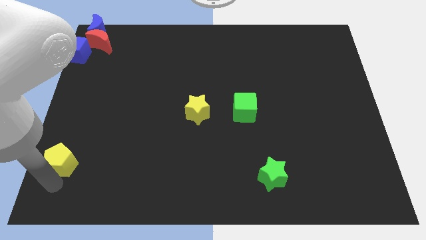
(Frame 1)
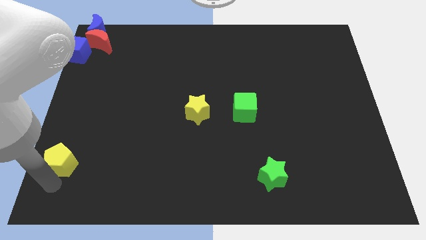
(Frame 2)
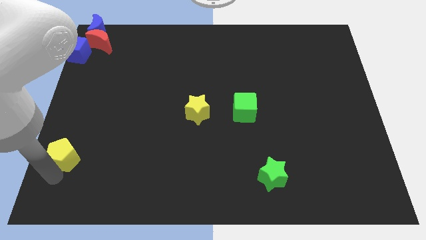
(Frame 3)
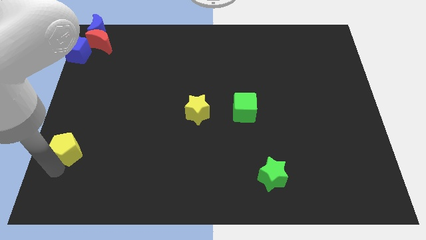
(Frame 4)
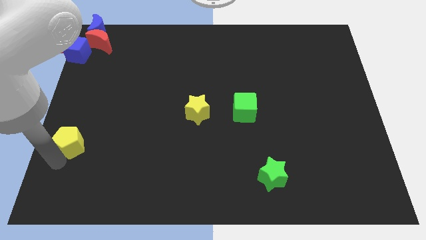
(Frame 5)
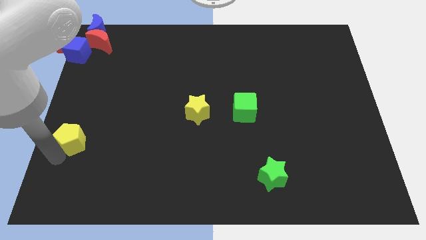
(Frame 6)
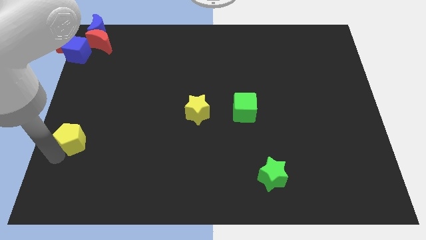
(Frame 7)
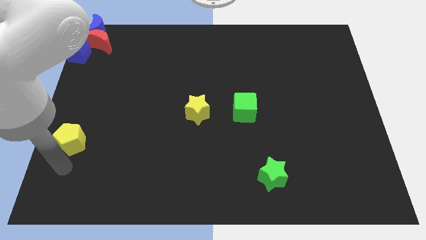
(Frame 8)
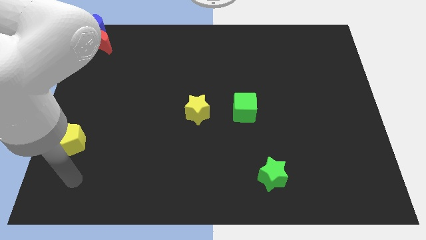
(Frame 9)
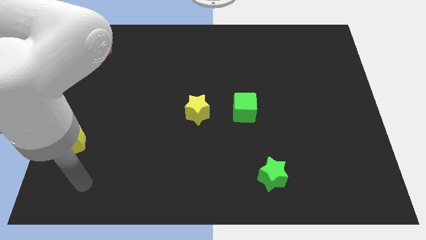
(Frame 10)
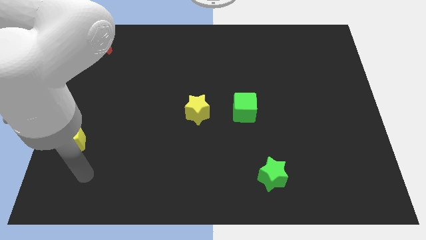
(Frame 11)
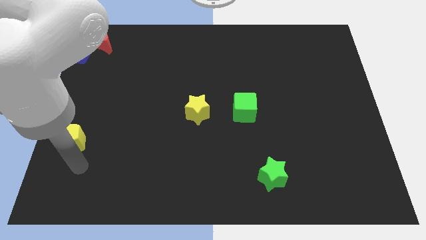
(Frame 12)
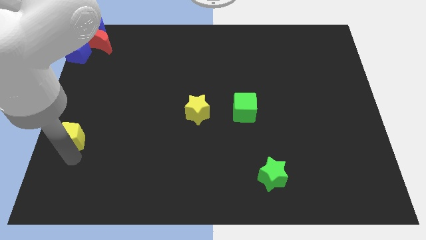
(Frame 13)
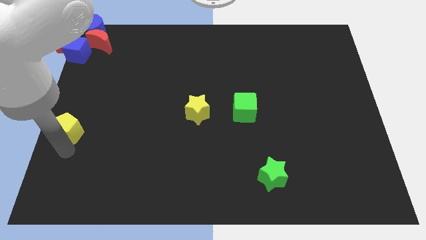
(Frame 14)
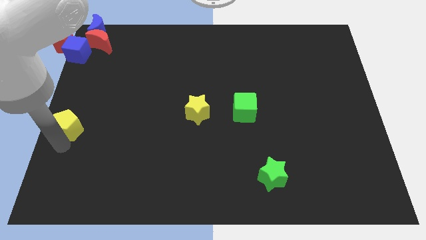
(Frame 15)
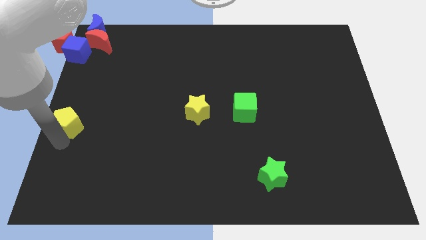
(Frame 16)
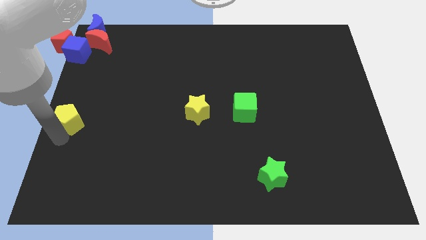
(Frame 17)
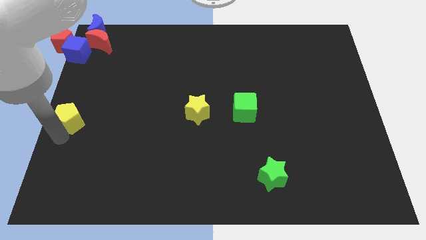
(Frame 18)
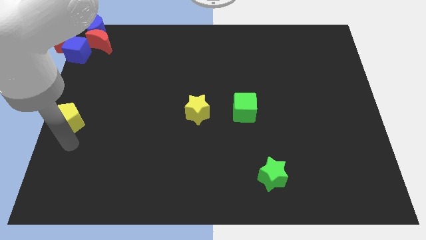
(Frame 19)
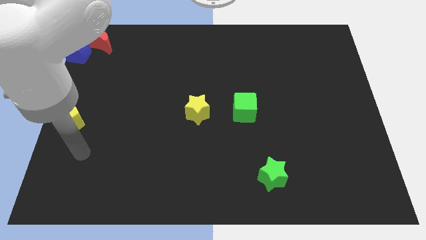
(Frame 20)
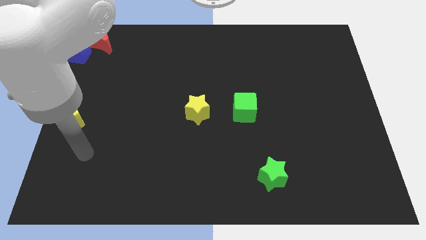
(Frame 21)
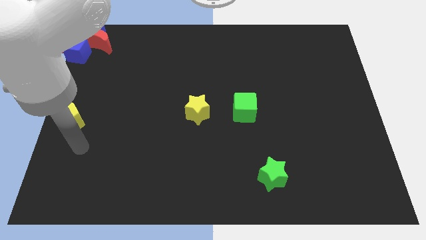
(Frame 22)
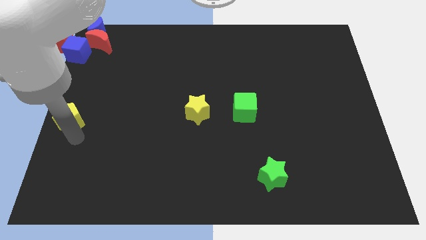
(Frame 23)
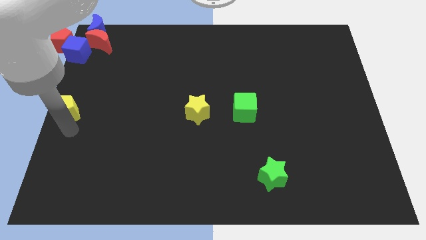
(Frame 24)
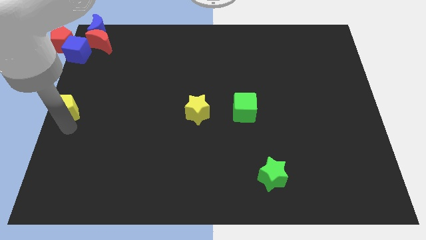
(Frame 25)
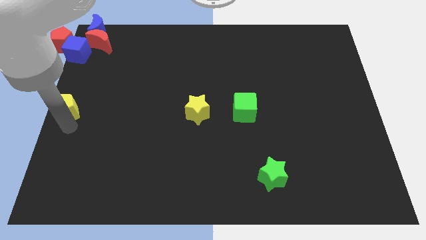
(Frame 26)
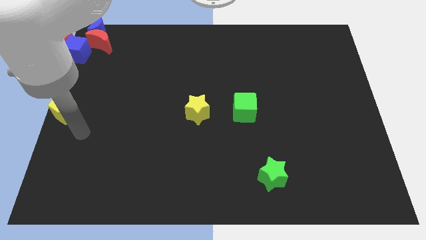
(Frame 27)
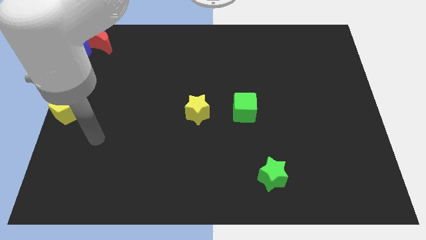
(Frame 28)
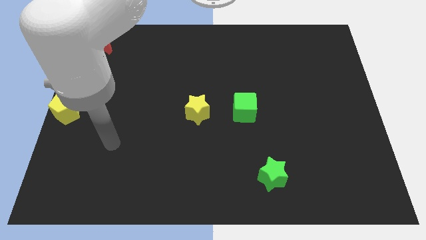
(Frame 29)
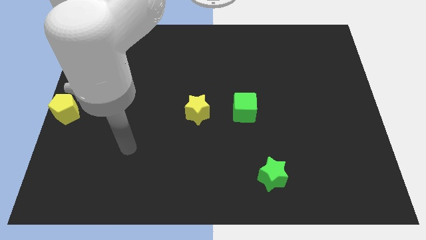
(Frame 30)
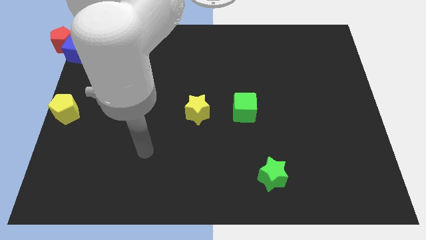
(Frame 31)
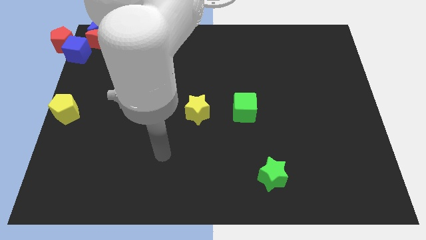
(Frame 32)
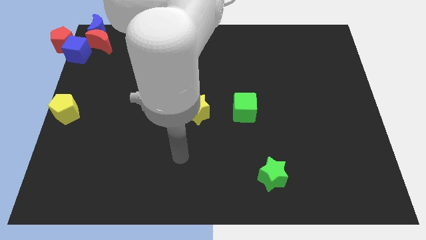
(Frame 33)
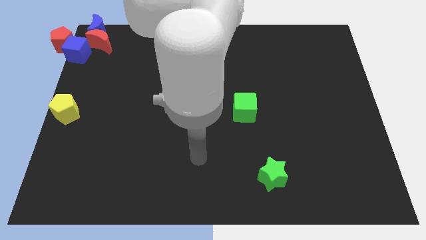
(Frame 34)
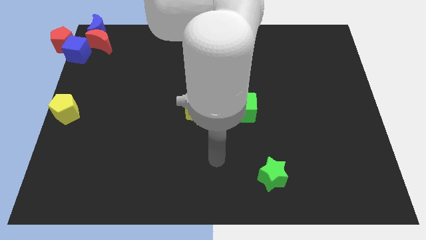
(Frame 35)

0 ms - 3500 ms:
move yellow pentagon to the center left

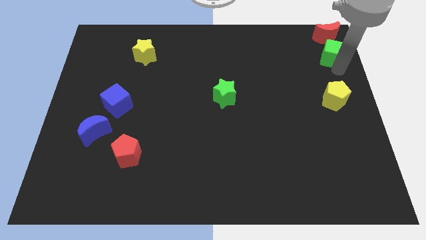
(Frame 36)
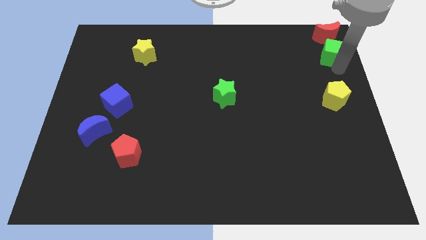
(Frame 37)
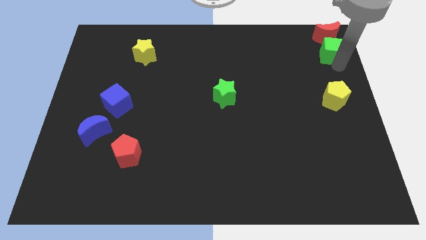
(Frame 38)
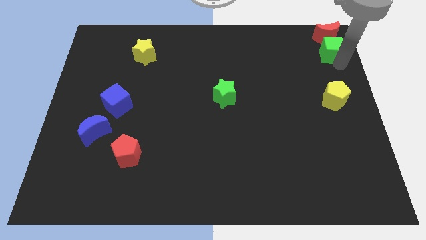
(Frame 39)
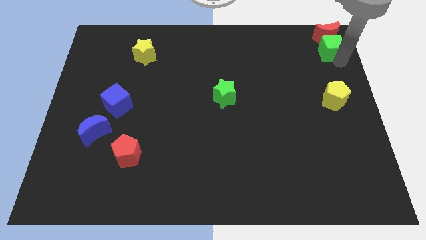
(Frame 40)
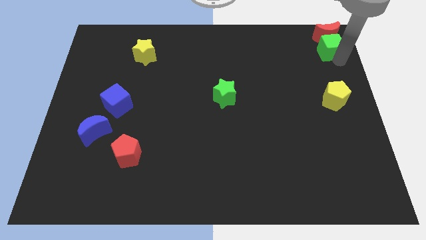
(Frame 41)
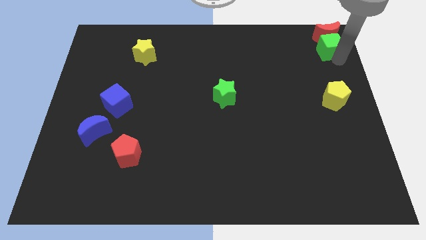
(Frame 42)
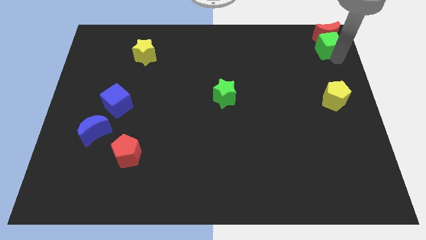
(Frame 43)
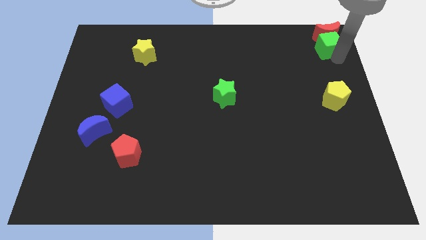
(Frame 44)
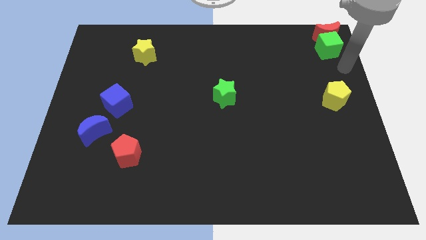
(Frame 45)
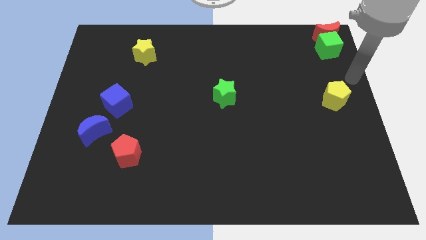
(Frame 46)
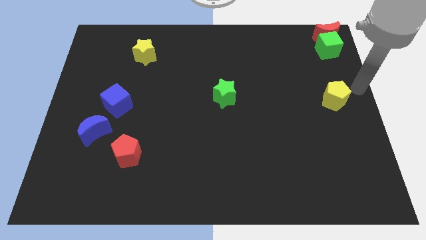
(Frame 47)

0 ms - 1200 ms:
move the green cube into the red crescent

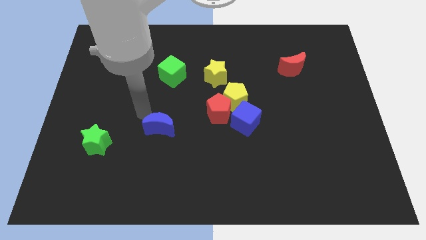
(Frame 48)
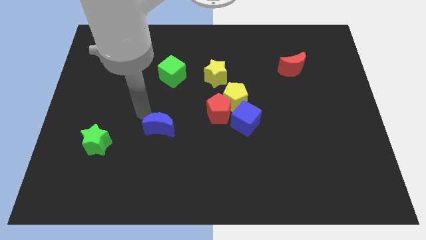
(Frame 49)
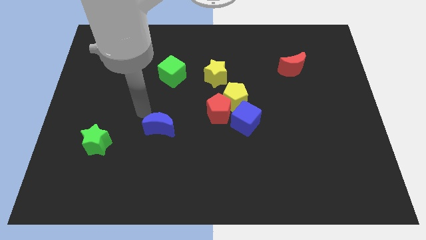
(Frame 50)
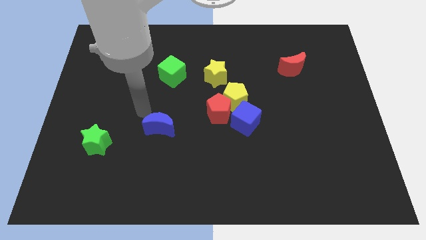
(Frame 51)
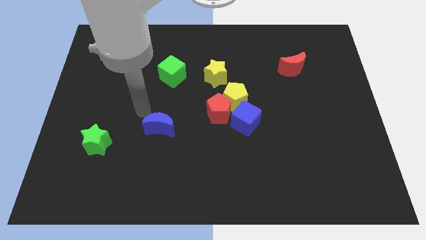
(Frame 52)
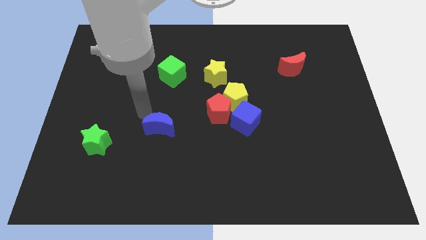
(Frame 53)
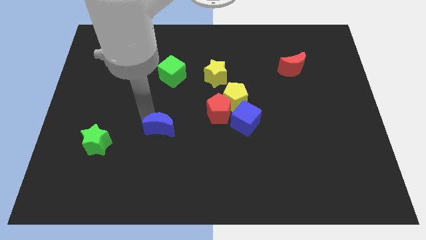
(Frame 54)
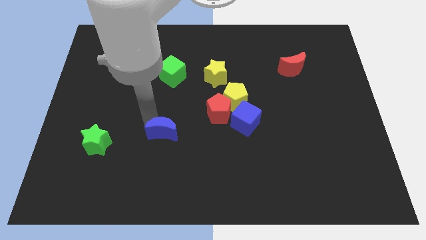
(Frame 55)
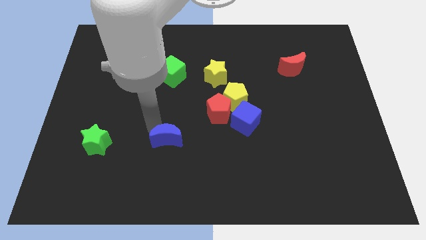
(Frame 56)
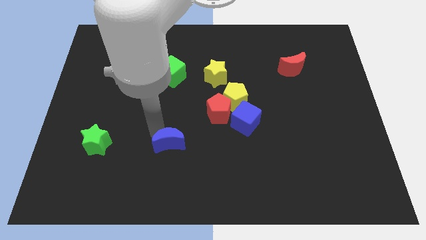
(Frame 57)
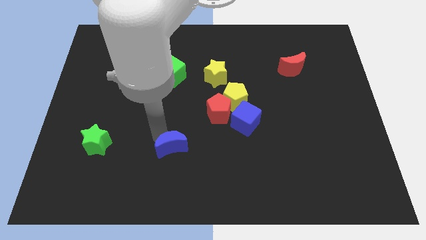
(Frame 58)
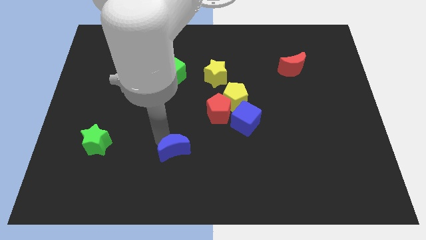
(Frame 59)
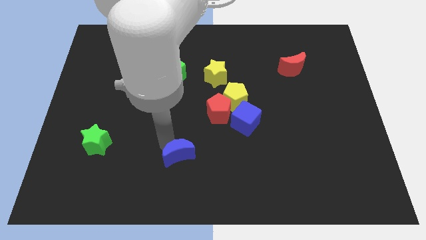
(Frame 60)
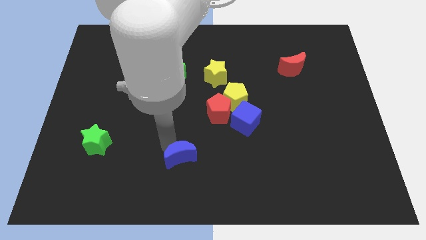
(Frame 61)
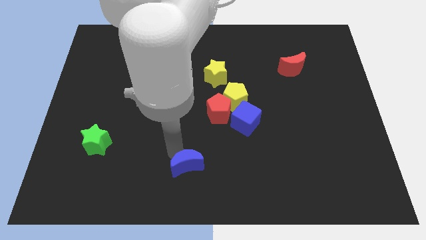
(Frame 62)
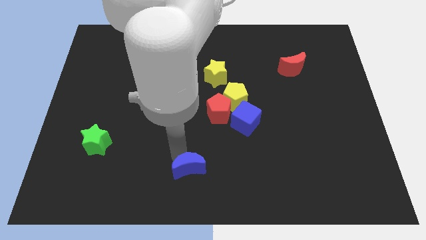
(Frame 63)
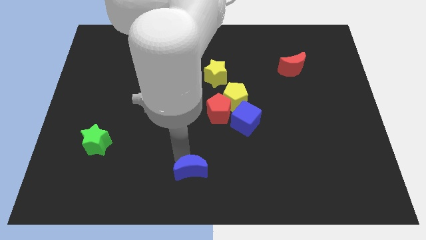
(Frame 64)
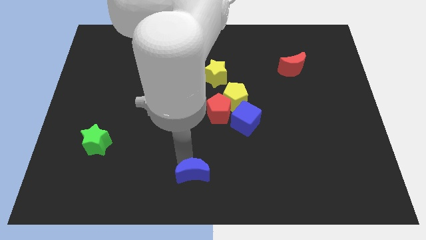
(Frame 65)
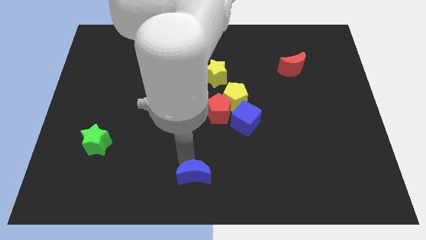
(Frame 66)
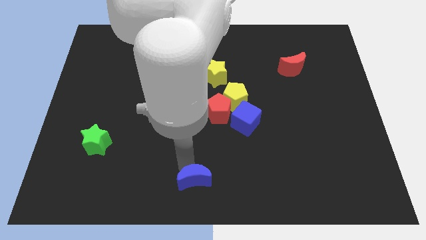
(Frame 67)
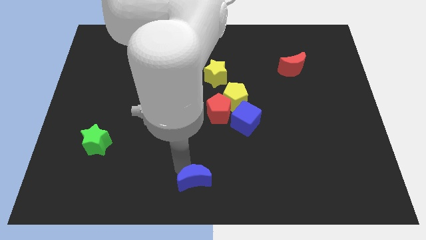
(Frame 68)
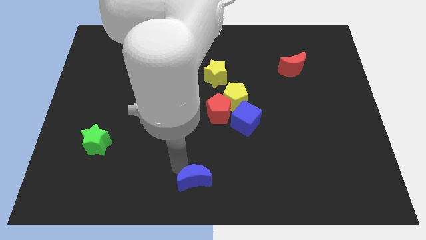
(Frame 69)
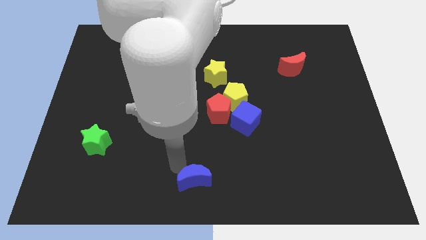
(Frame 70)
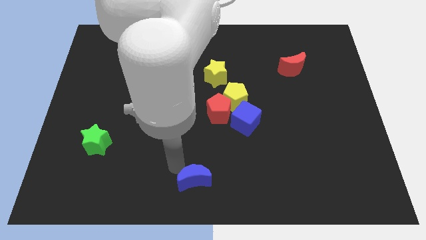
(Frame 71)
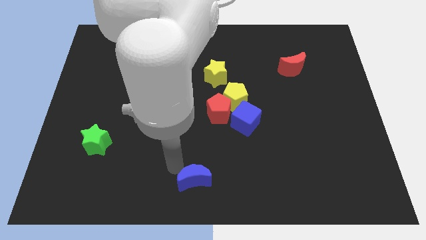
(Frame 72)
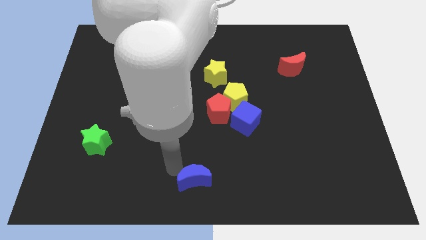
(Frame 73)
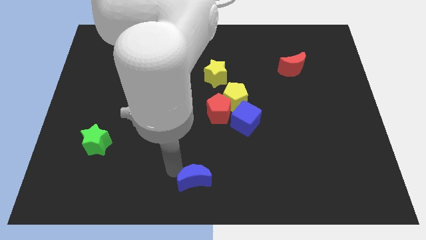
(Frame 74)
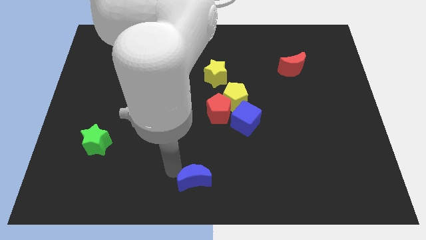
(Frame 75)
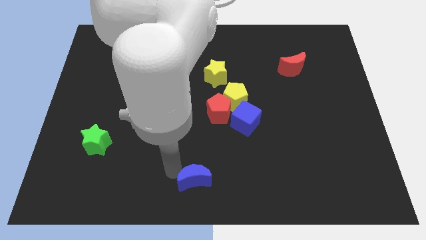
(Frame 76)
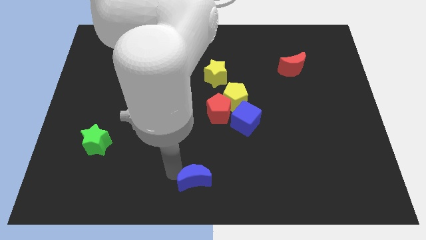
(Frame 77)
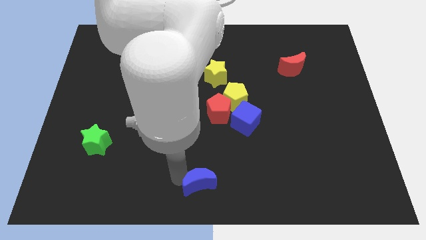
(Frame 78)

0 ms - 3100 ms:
slide the blue crescent towards bottom center of the board

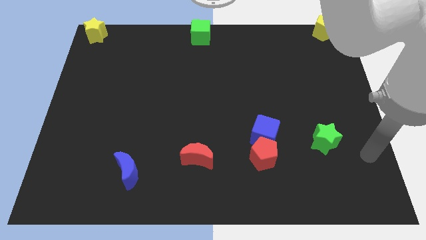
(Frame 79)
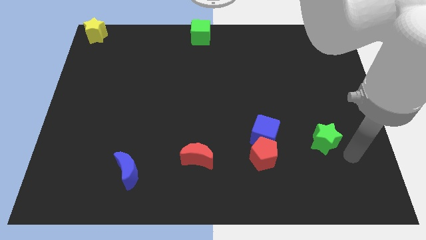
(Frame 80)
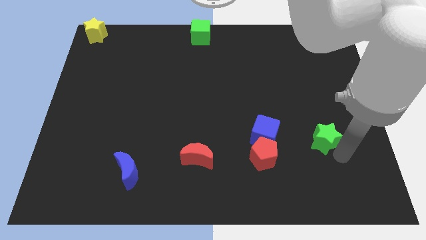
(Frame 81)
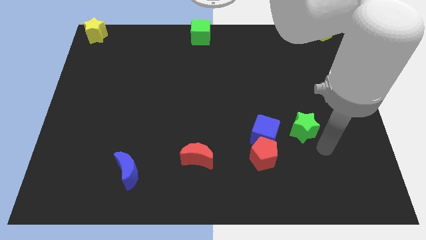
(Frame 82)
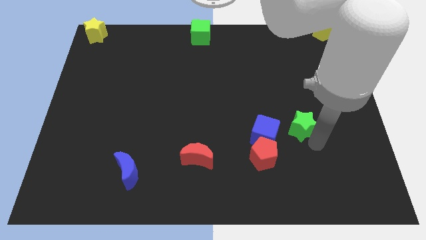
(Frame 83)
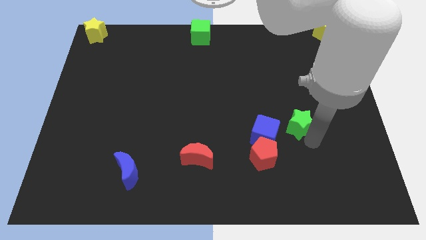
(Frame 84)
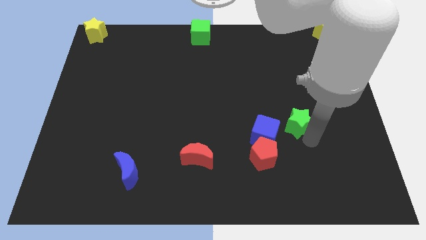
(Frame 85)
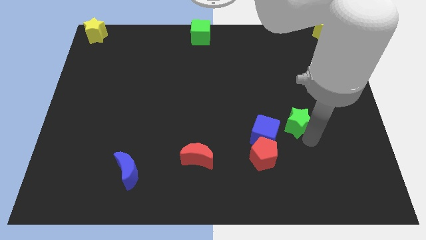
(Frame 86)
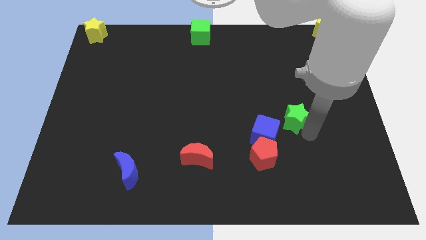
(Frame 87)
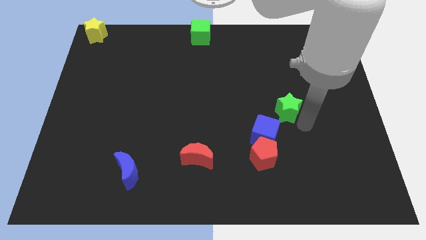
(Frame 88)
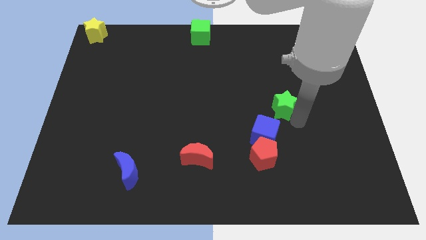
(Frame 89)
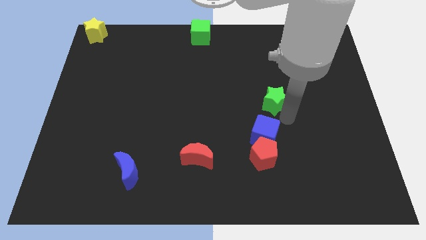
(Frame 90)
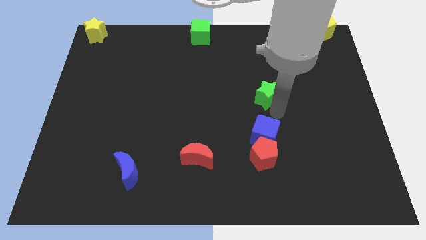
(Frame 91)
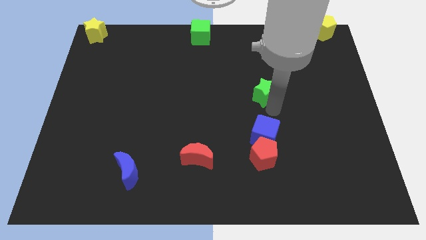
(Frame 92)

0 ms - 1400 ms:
push the green star to the top side of the blue cube
